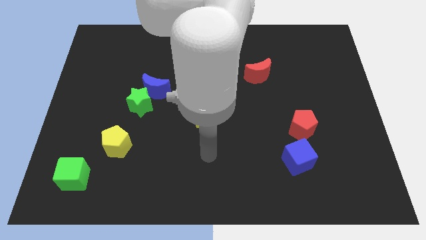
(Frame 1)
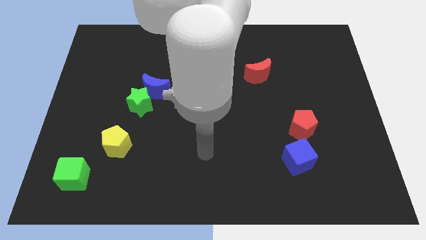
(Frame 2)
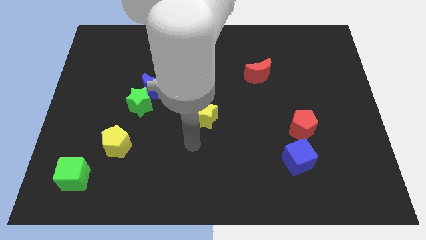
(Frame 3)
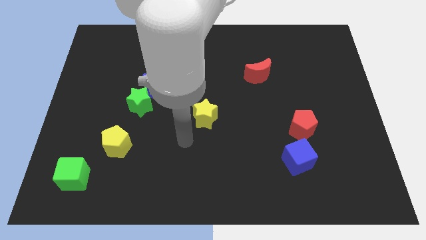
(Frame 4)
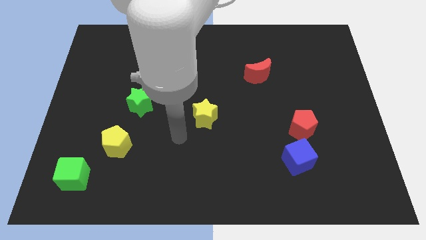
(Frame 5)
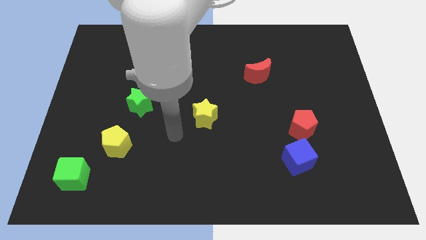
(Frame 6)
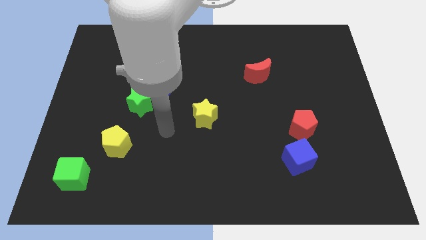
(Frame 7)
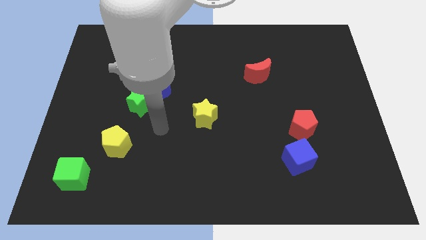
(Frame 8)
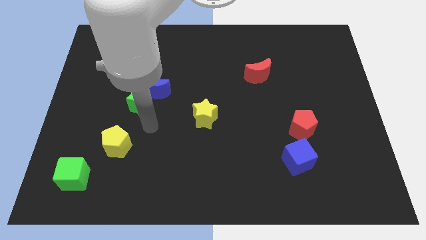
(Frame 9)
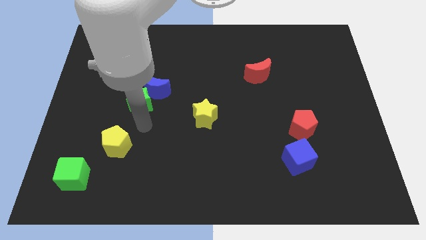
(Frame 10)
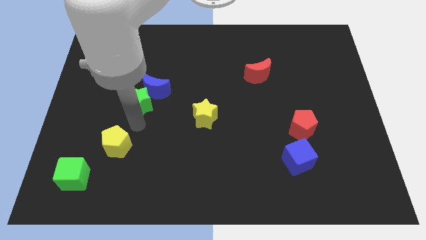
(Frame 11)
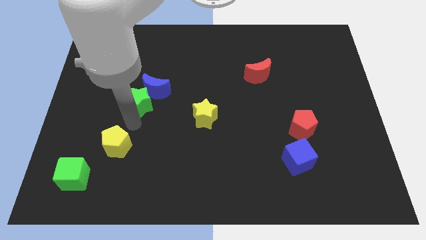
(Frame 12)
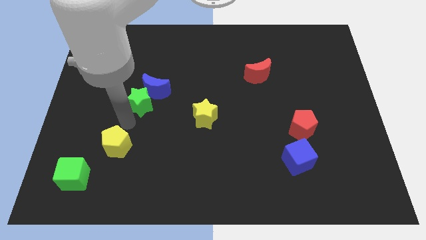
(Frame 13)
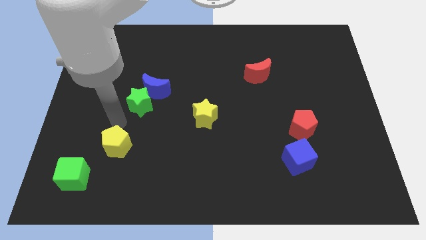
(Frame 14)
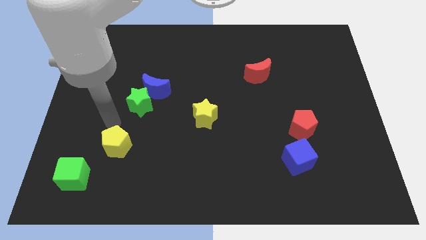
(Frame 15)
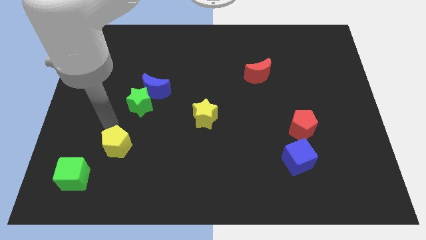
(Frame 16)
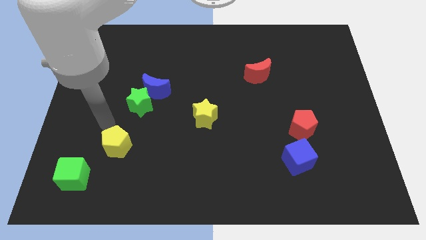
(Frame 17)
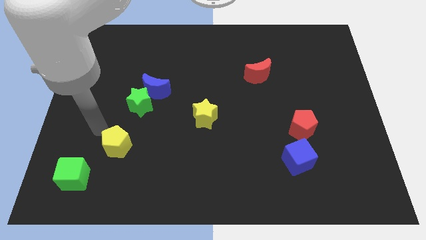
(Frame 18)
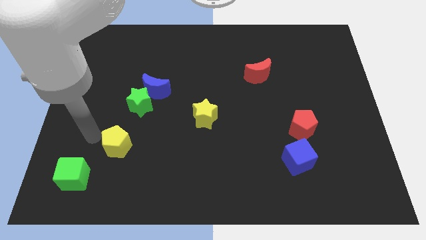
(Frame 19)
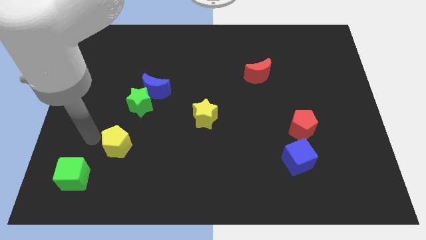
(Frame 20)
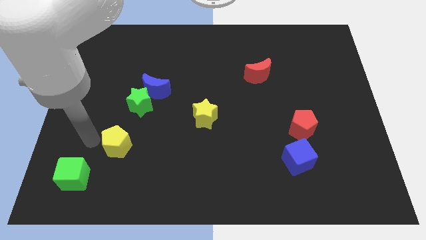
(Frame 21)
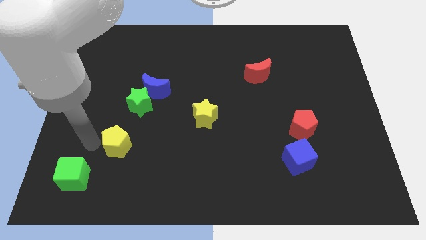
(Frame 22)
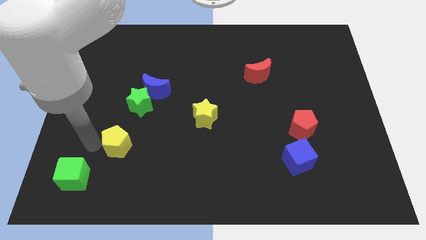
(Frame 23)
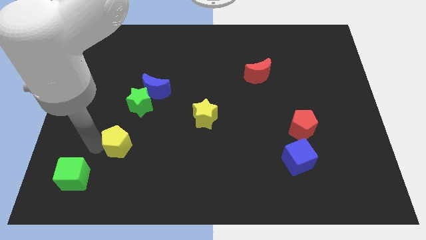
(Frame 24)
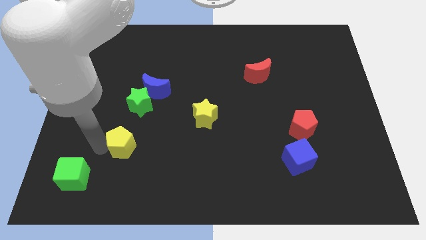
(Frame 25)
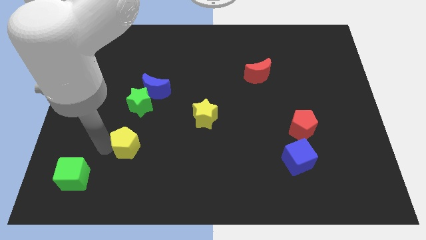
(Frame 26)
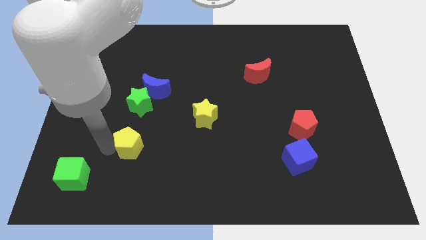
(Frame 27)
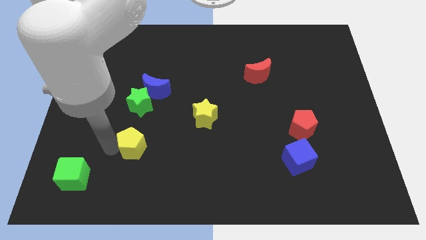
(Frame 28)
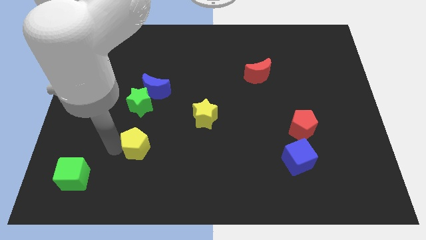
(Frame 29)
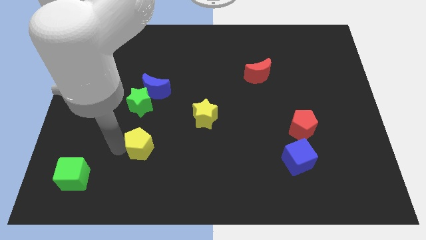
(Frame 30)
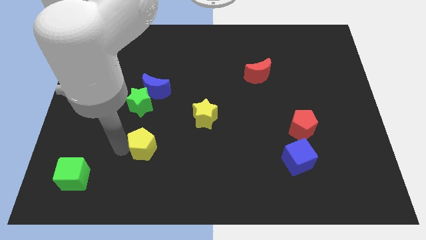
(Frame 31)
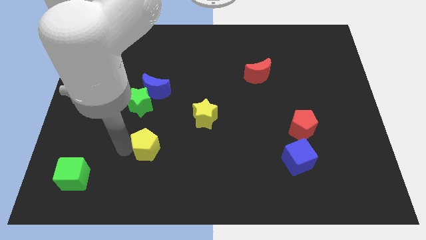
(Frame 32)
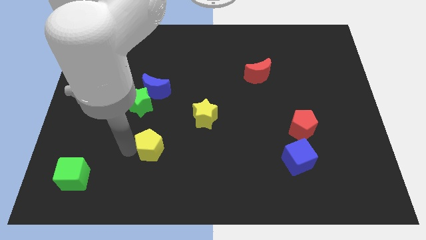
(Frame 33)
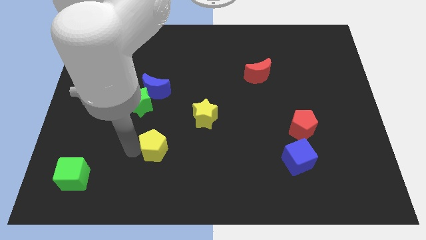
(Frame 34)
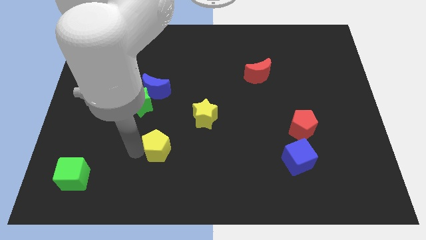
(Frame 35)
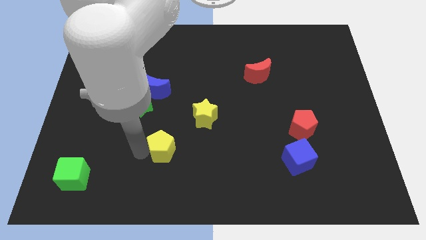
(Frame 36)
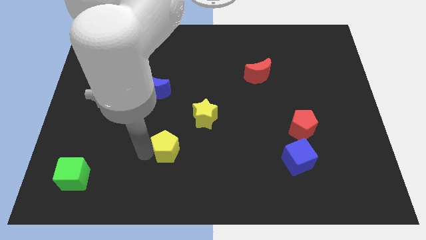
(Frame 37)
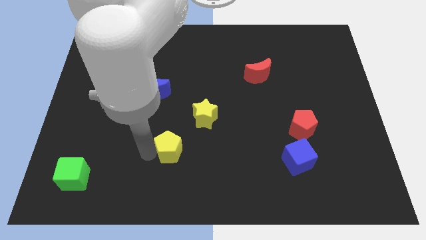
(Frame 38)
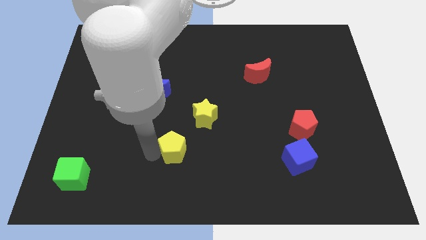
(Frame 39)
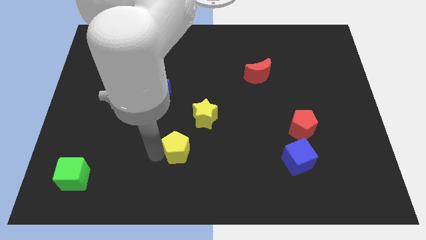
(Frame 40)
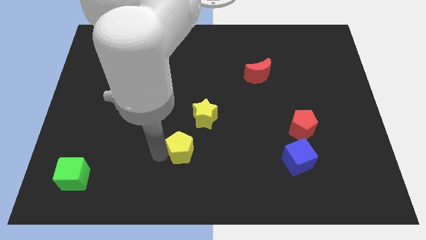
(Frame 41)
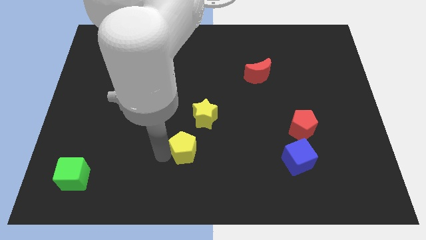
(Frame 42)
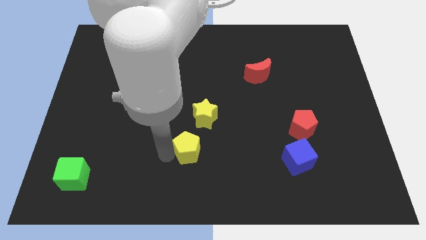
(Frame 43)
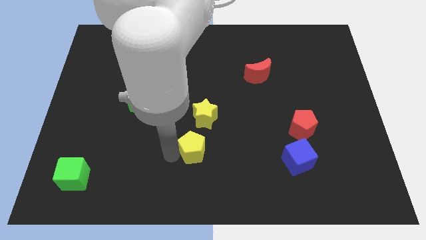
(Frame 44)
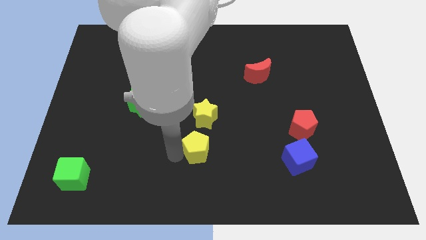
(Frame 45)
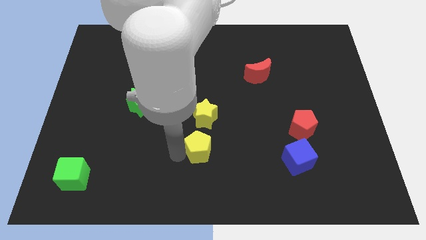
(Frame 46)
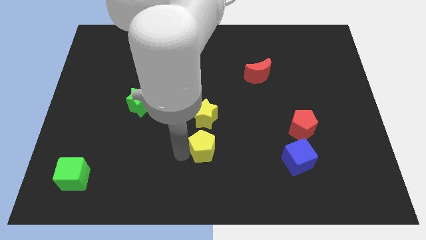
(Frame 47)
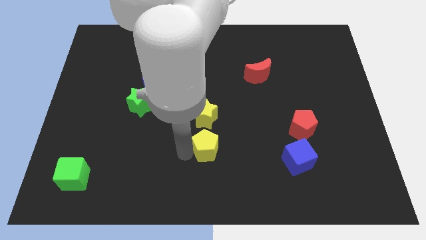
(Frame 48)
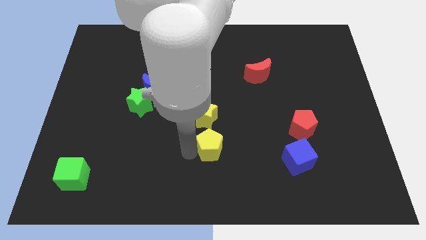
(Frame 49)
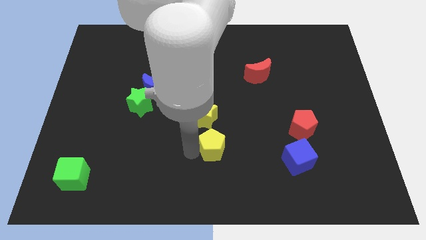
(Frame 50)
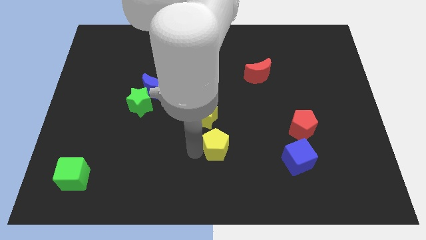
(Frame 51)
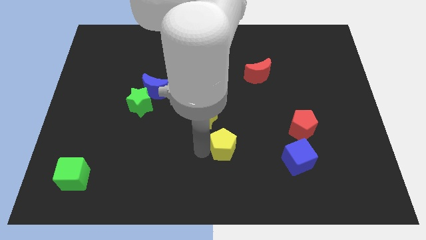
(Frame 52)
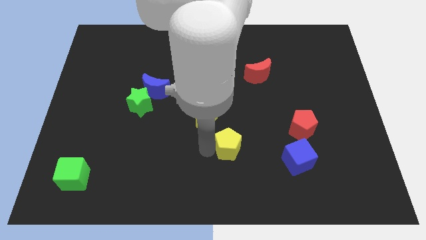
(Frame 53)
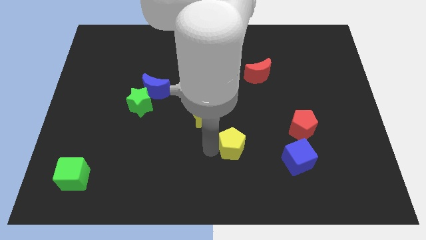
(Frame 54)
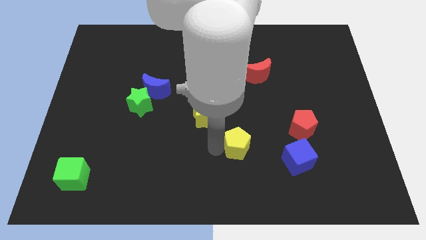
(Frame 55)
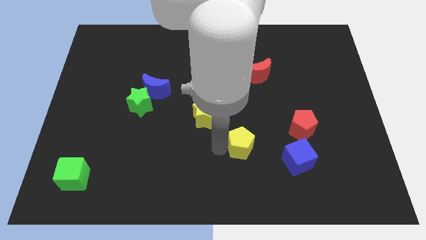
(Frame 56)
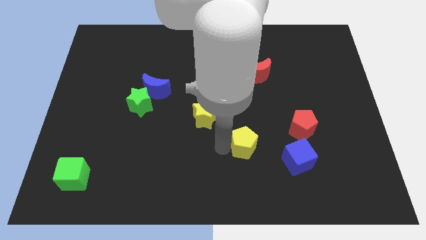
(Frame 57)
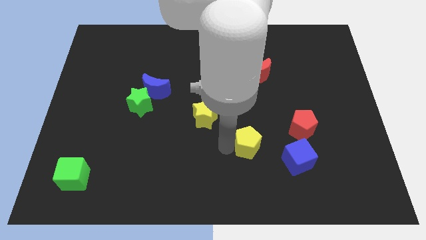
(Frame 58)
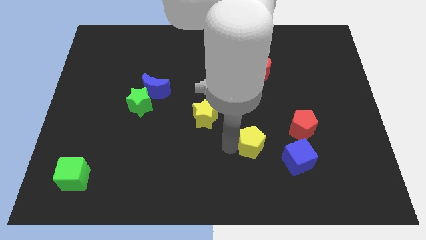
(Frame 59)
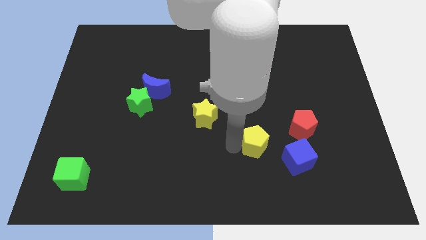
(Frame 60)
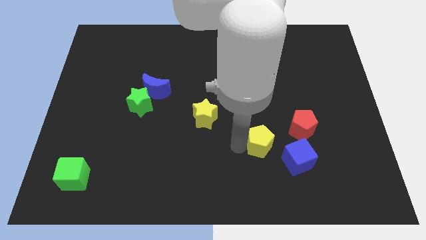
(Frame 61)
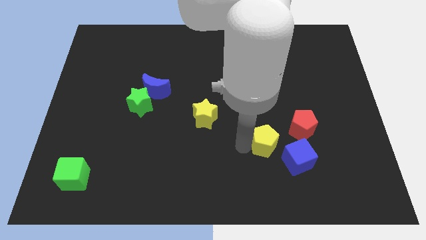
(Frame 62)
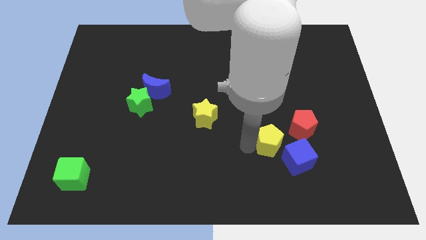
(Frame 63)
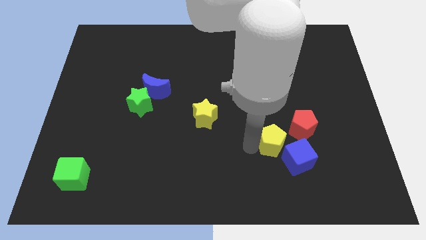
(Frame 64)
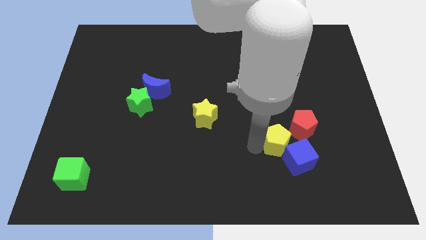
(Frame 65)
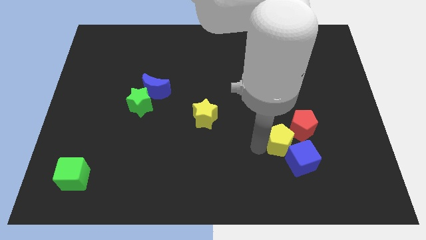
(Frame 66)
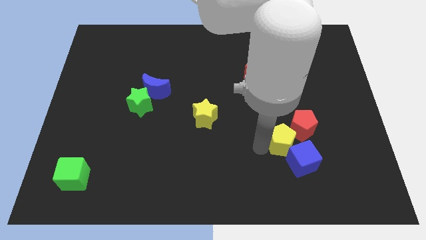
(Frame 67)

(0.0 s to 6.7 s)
move the yellow pentagon close to the blue cube

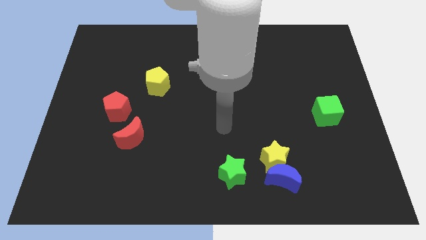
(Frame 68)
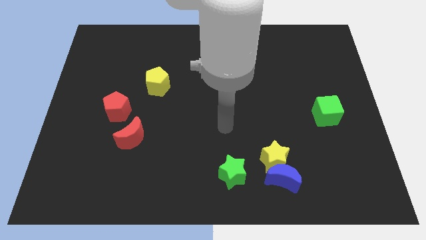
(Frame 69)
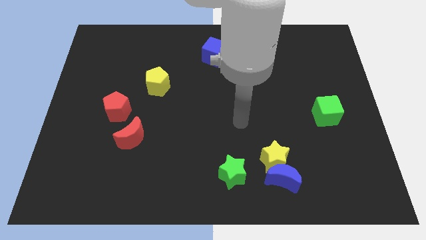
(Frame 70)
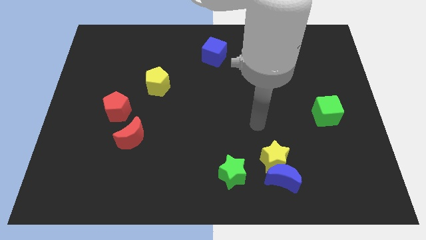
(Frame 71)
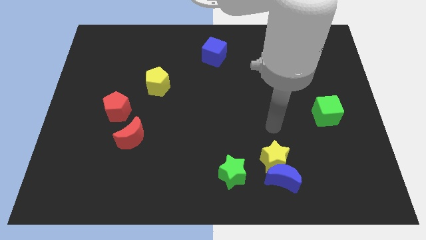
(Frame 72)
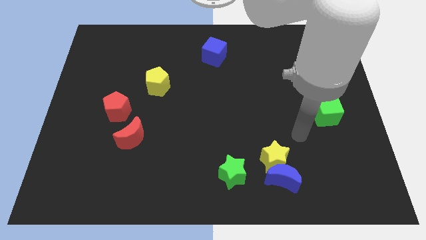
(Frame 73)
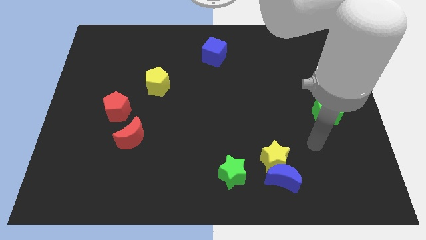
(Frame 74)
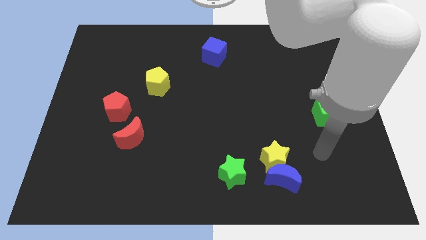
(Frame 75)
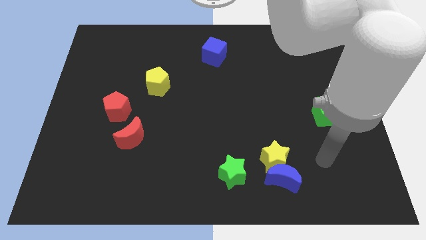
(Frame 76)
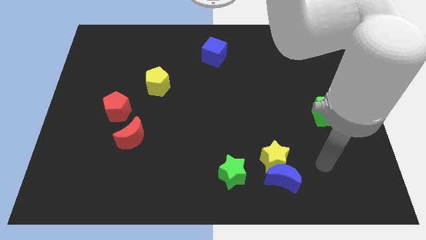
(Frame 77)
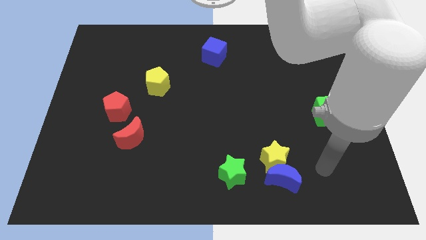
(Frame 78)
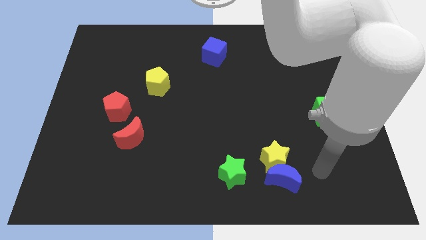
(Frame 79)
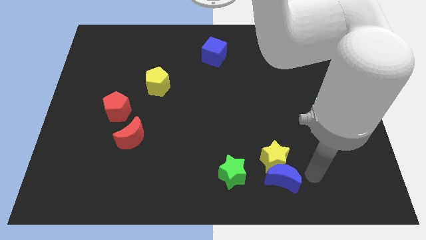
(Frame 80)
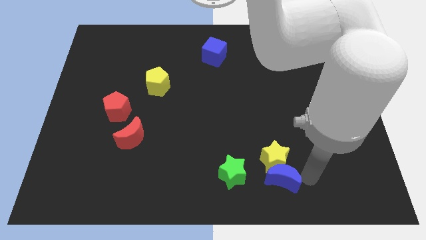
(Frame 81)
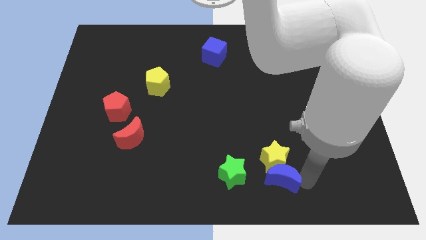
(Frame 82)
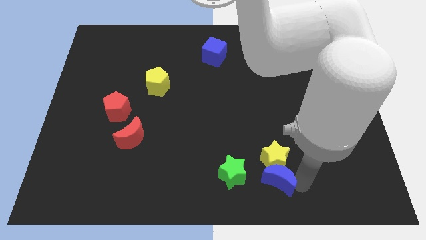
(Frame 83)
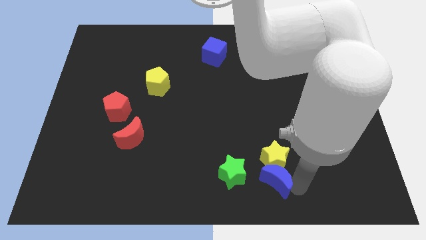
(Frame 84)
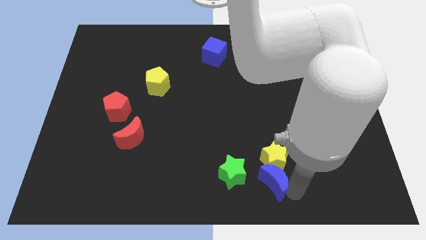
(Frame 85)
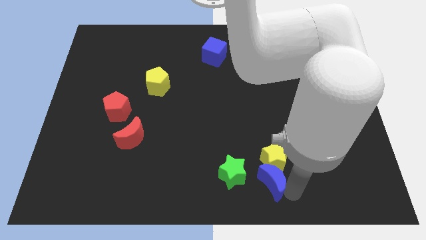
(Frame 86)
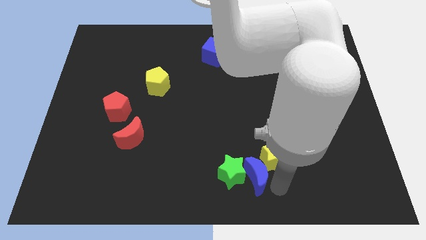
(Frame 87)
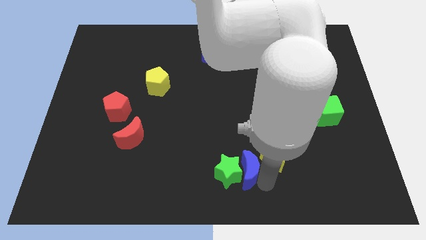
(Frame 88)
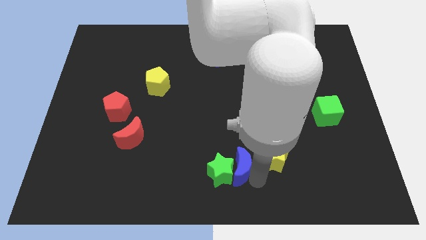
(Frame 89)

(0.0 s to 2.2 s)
push the blue moon to the green star
